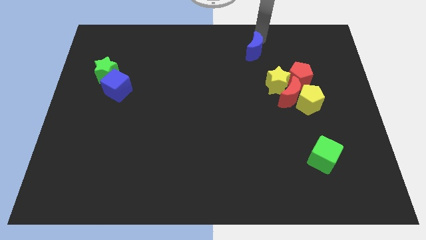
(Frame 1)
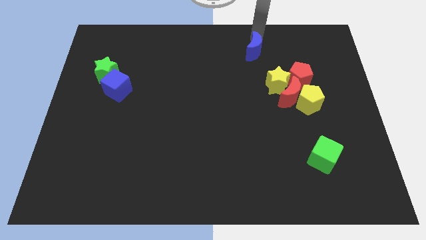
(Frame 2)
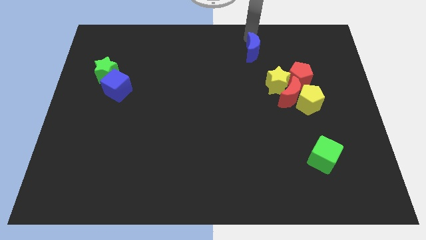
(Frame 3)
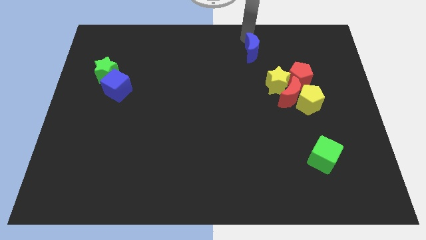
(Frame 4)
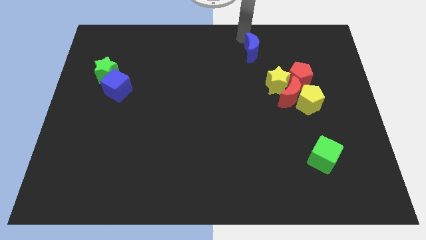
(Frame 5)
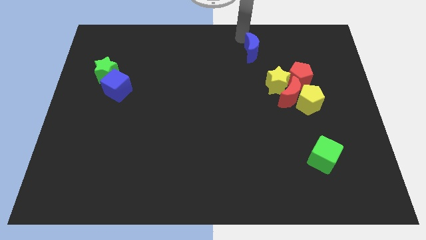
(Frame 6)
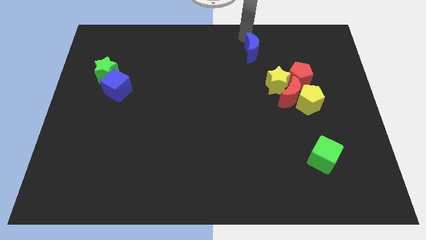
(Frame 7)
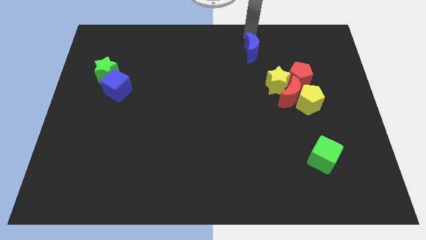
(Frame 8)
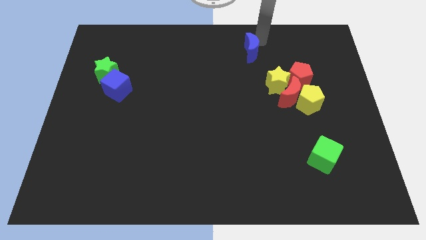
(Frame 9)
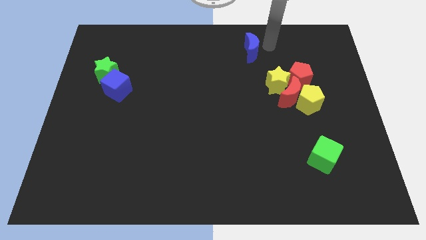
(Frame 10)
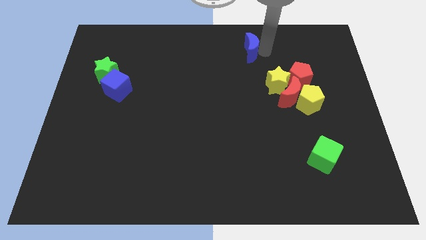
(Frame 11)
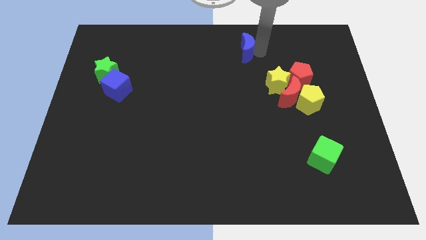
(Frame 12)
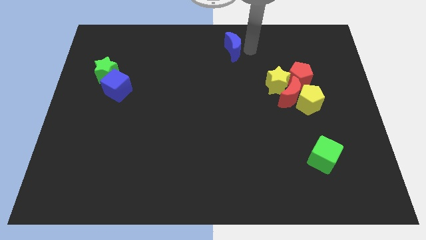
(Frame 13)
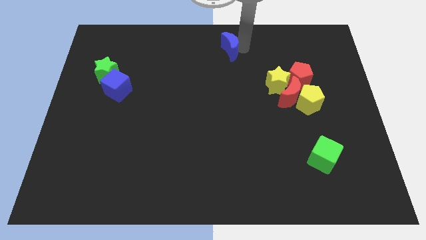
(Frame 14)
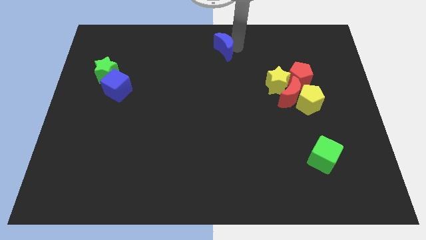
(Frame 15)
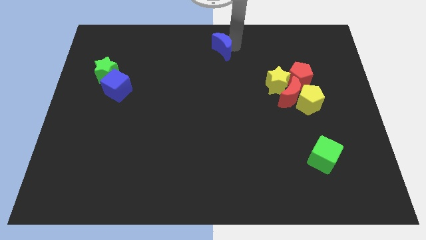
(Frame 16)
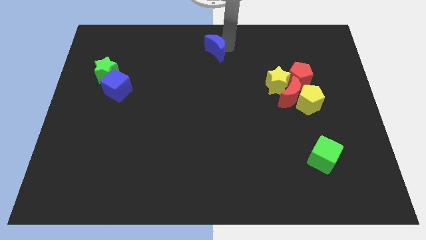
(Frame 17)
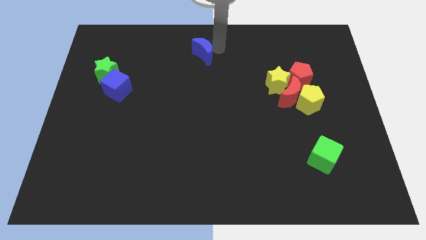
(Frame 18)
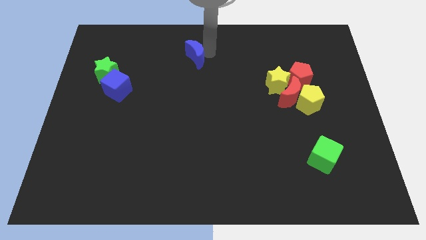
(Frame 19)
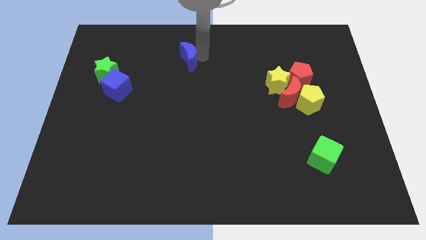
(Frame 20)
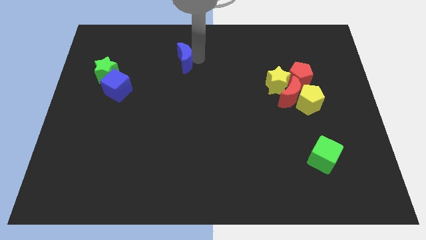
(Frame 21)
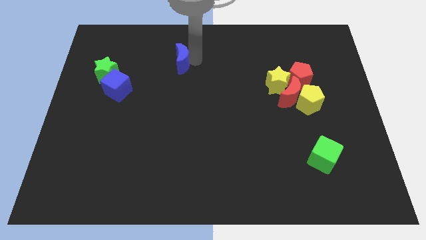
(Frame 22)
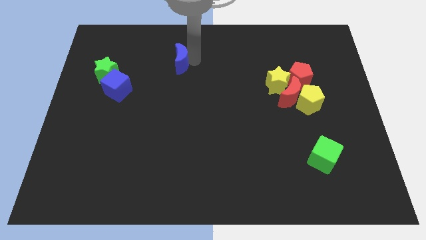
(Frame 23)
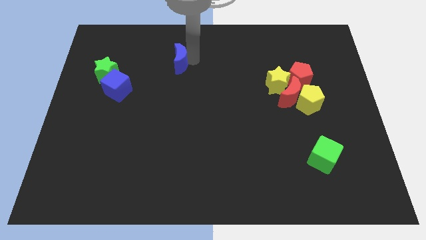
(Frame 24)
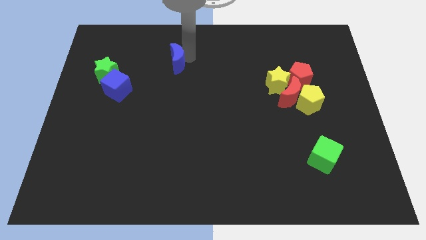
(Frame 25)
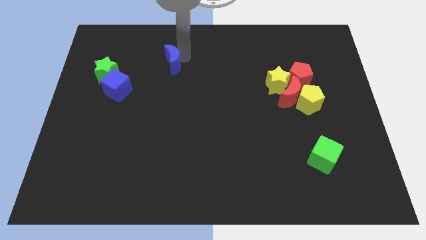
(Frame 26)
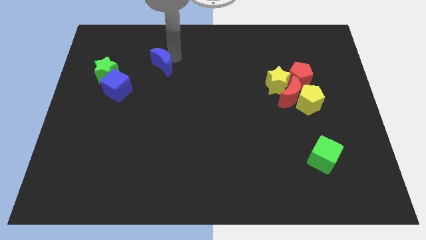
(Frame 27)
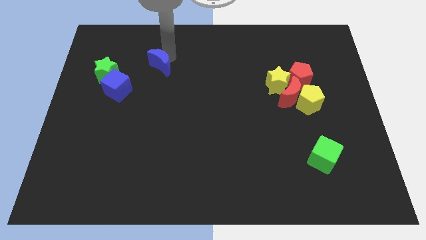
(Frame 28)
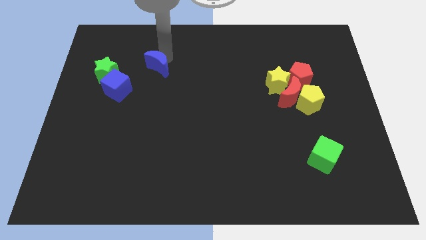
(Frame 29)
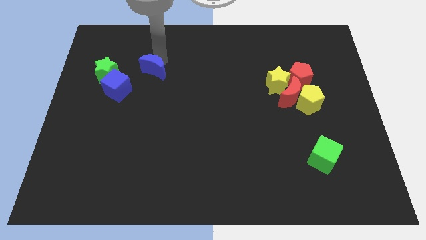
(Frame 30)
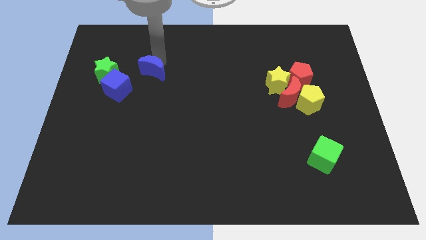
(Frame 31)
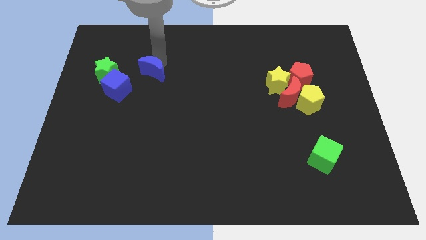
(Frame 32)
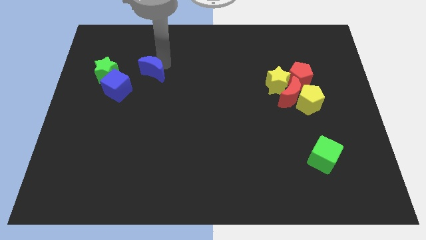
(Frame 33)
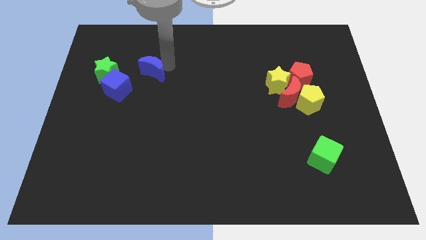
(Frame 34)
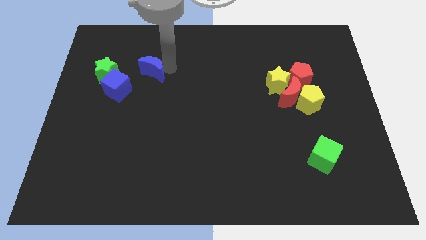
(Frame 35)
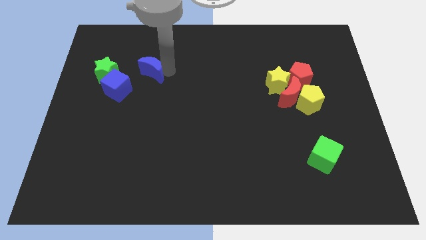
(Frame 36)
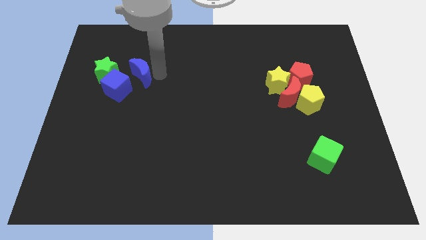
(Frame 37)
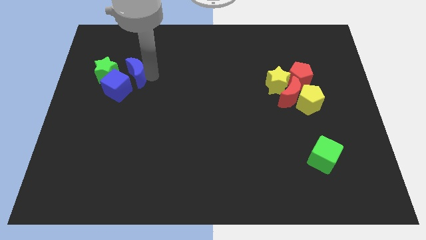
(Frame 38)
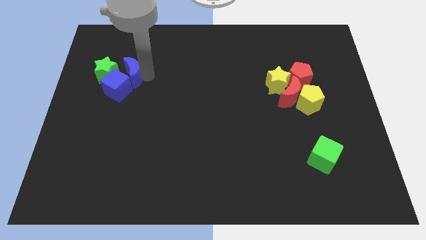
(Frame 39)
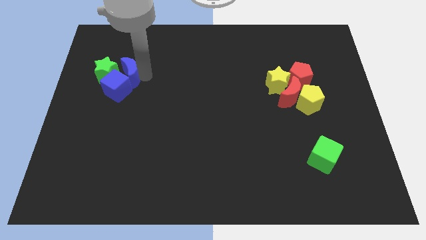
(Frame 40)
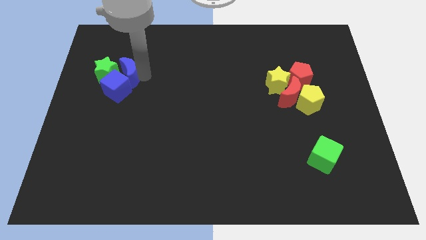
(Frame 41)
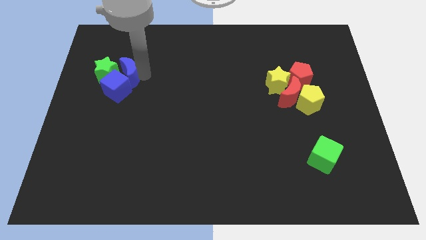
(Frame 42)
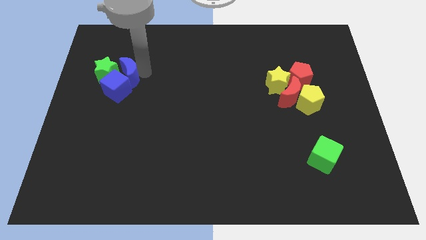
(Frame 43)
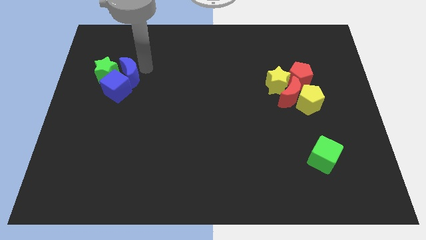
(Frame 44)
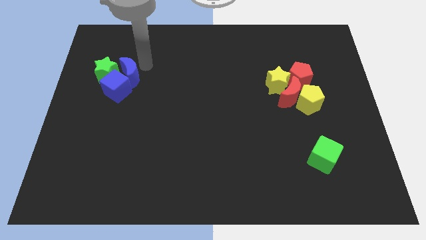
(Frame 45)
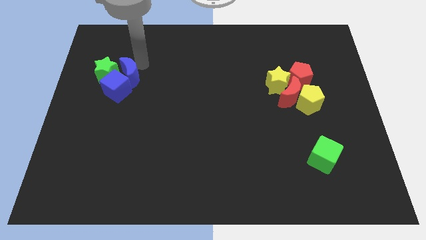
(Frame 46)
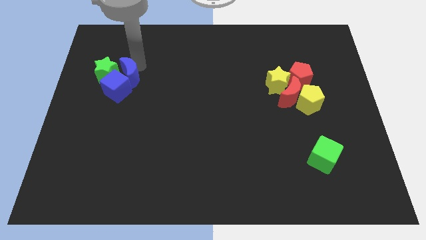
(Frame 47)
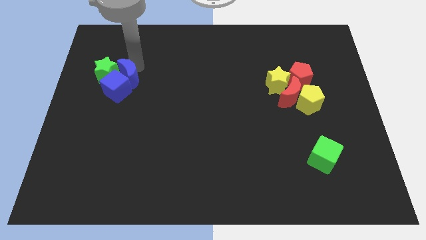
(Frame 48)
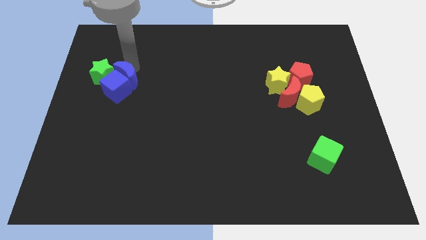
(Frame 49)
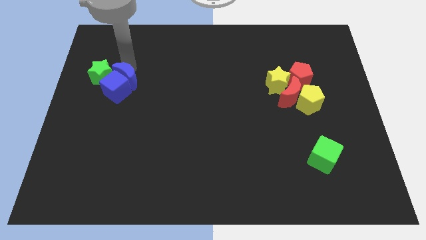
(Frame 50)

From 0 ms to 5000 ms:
move the blue moon towards left side of the blue cube

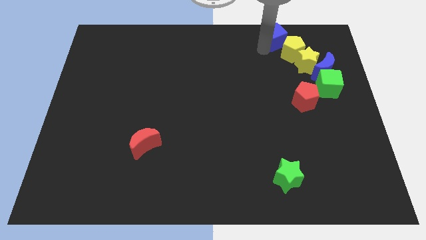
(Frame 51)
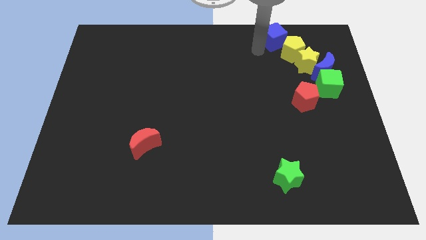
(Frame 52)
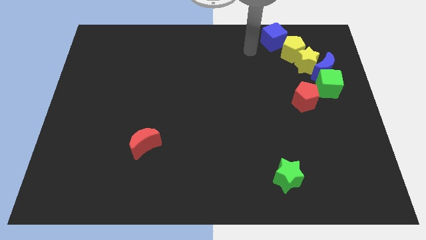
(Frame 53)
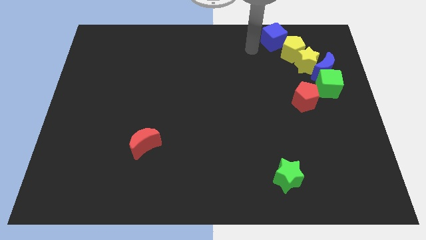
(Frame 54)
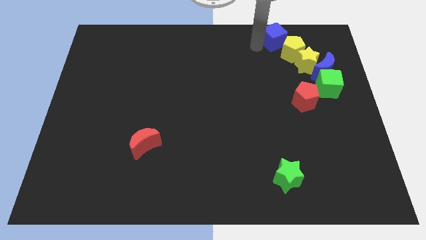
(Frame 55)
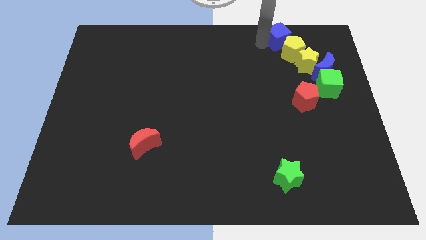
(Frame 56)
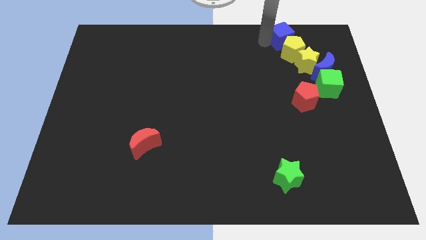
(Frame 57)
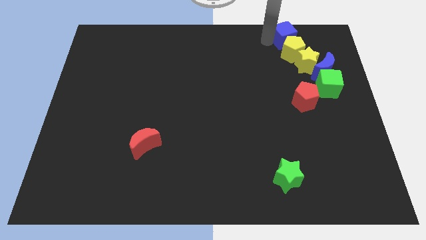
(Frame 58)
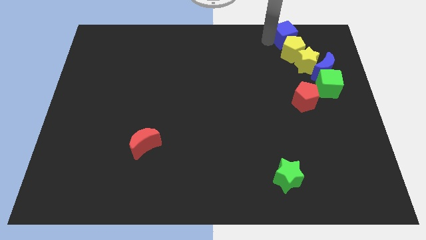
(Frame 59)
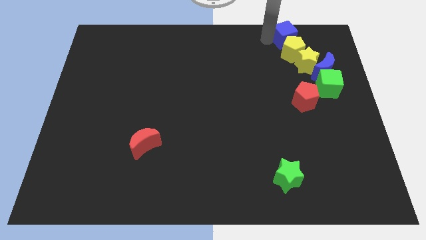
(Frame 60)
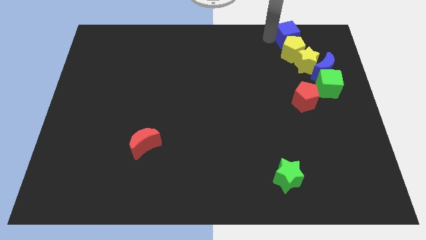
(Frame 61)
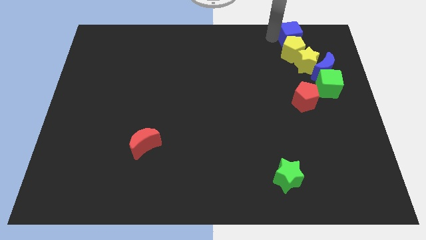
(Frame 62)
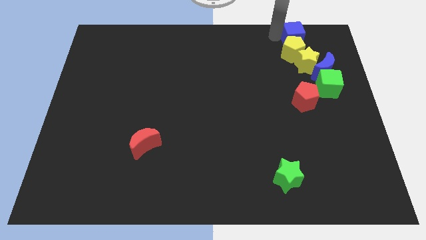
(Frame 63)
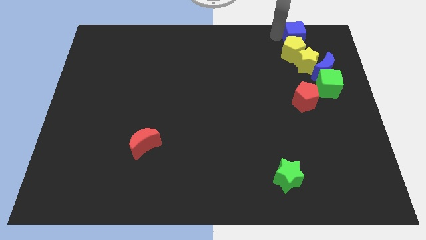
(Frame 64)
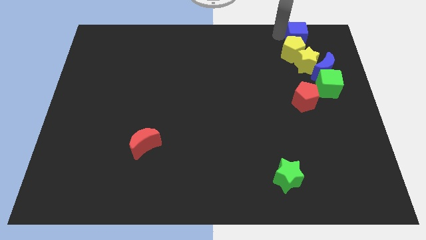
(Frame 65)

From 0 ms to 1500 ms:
move the blue cube to the top of the yellow pentagon

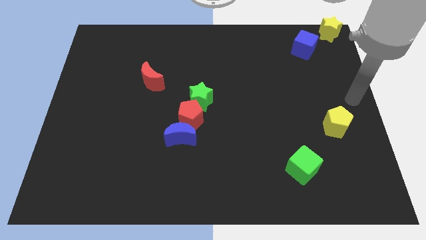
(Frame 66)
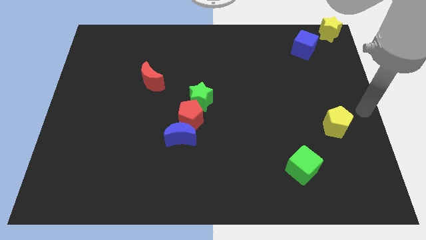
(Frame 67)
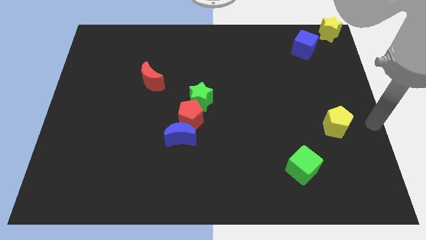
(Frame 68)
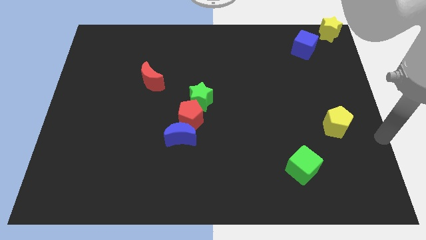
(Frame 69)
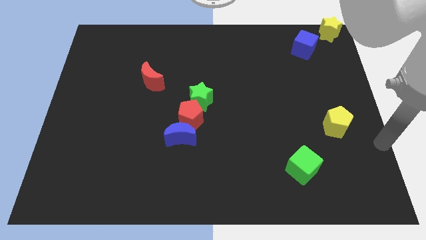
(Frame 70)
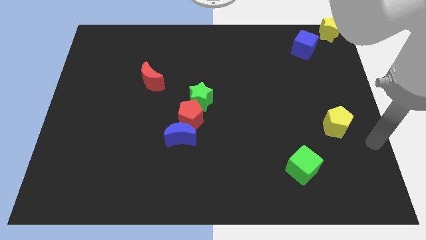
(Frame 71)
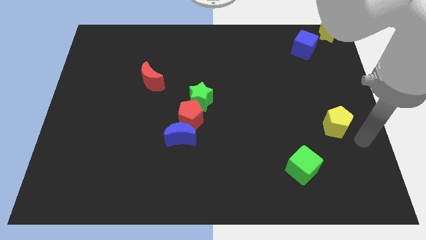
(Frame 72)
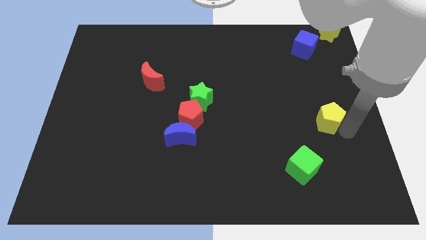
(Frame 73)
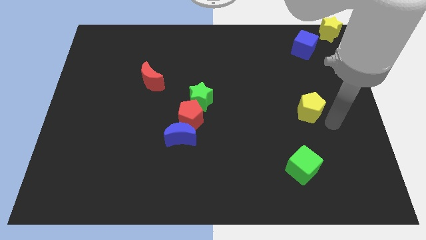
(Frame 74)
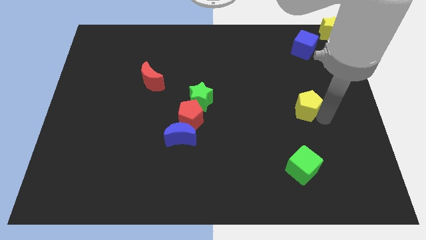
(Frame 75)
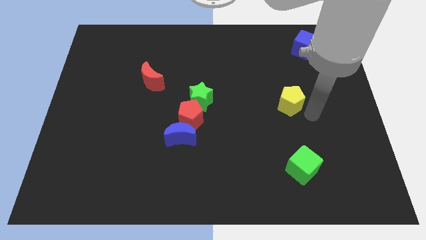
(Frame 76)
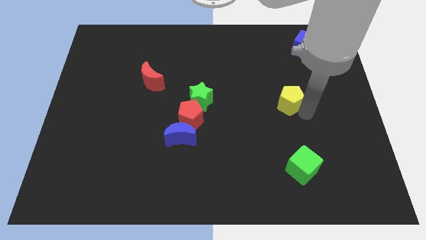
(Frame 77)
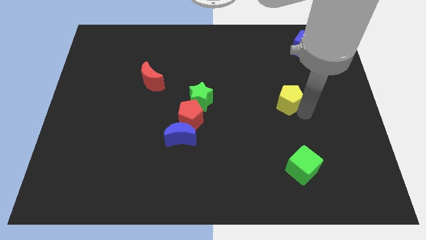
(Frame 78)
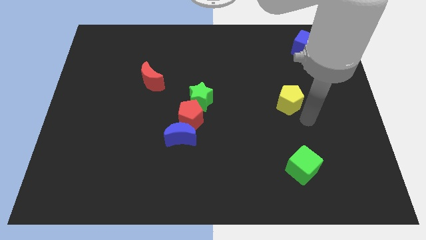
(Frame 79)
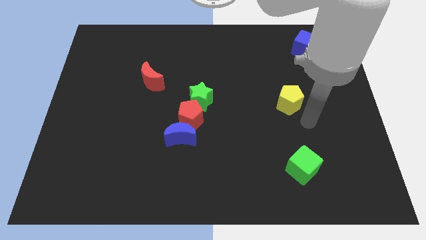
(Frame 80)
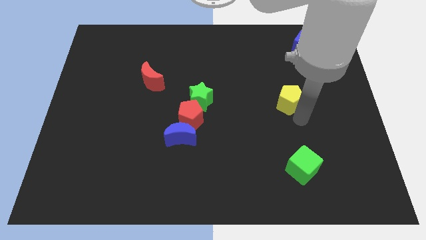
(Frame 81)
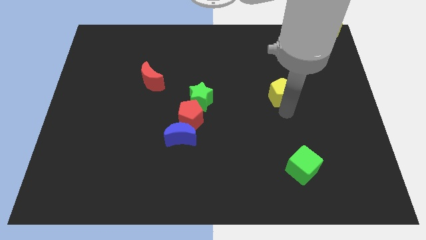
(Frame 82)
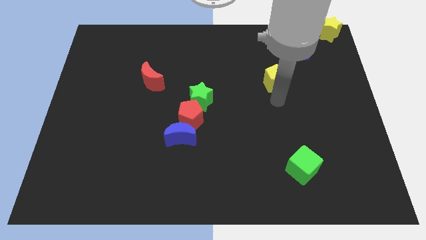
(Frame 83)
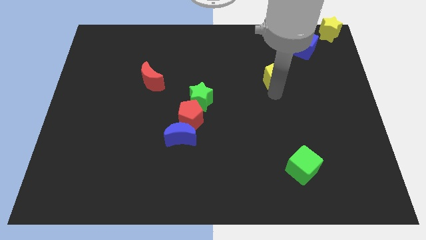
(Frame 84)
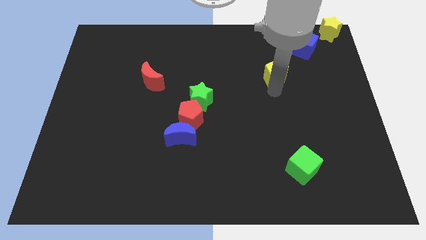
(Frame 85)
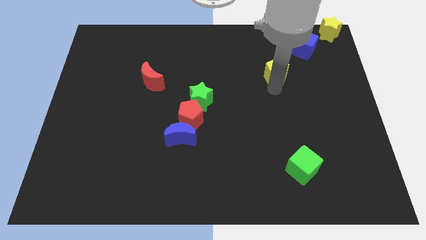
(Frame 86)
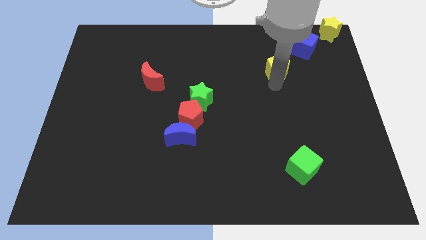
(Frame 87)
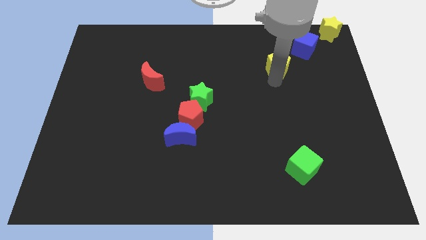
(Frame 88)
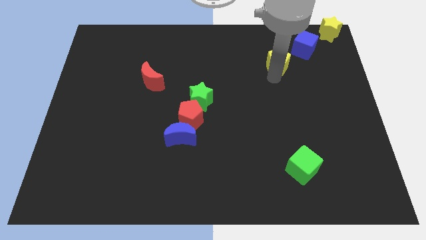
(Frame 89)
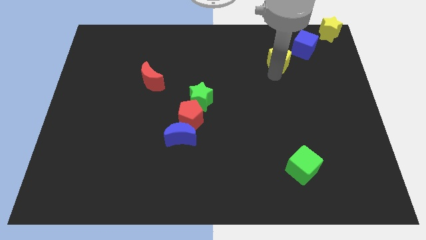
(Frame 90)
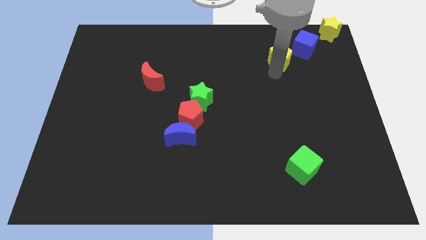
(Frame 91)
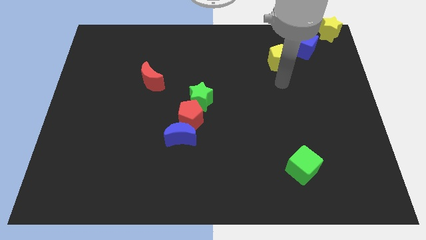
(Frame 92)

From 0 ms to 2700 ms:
push yellow pentagon diagonal to blue cube
